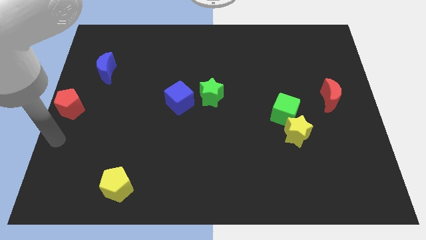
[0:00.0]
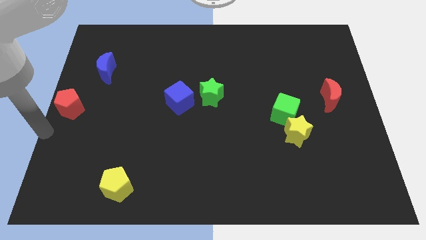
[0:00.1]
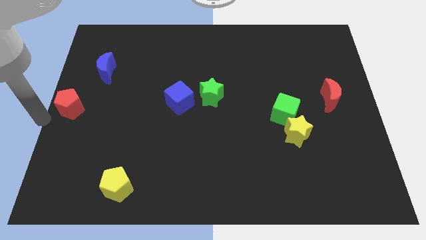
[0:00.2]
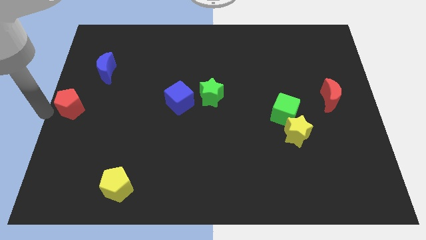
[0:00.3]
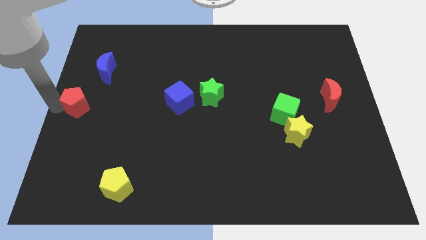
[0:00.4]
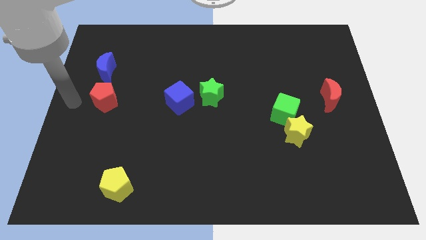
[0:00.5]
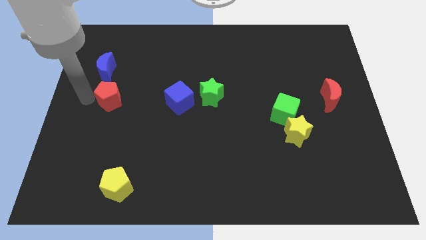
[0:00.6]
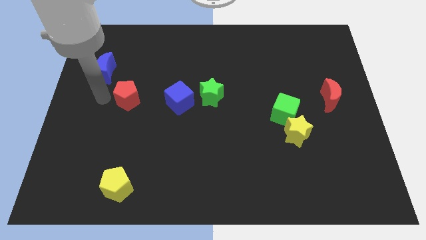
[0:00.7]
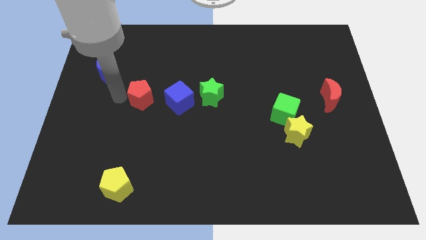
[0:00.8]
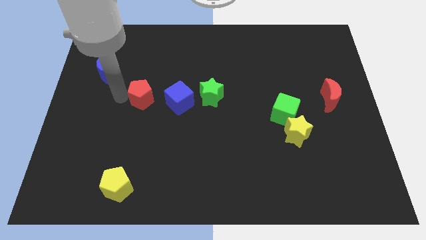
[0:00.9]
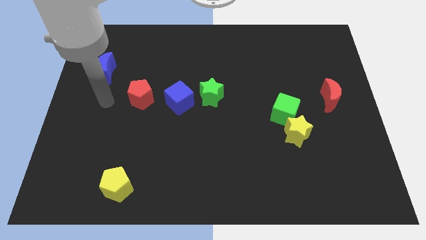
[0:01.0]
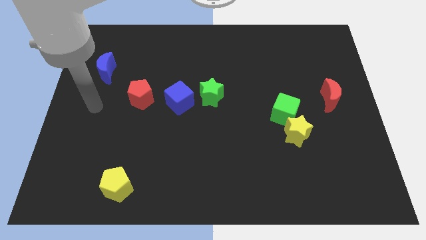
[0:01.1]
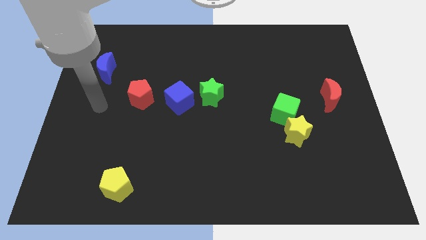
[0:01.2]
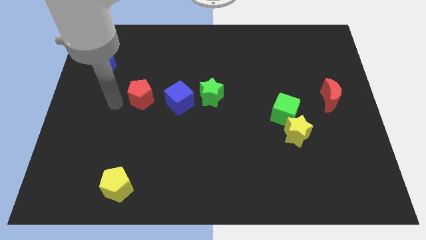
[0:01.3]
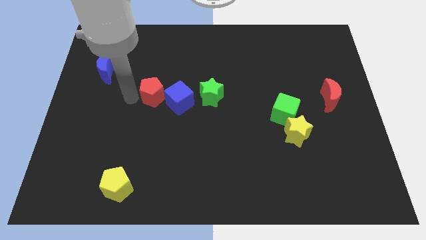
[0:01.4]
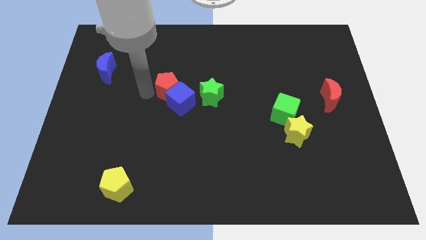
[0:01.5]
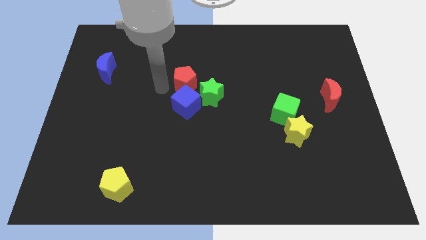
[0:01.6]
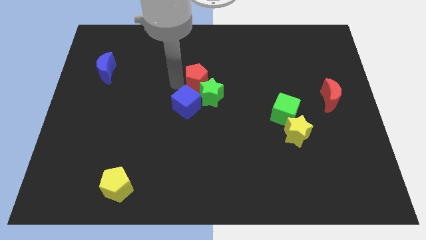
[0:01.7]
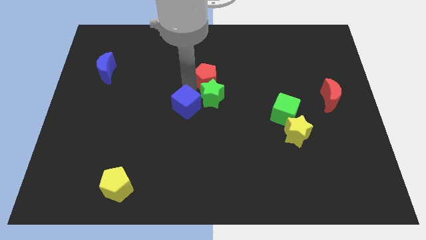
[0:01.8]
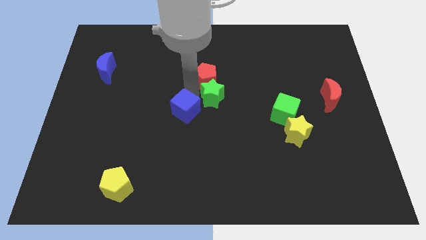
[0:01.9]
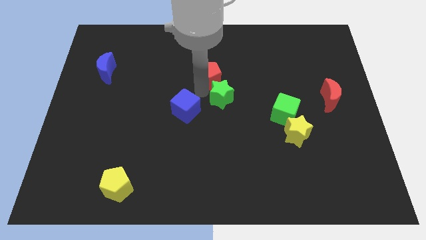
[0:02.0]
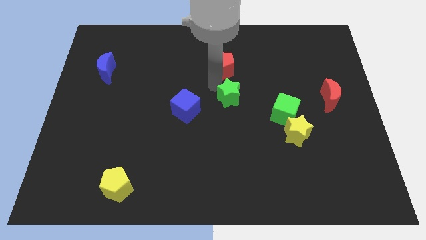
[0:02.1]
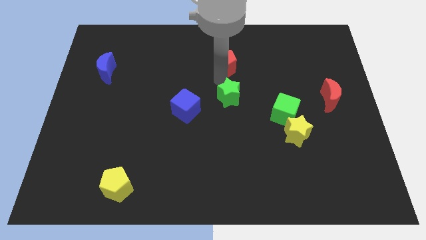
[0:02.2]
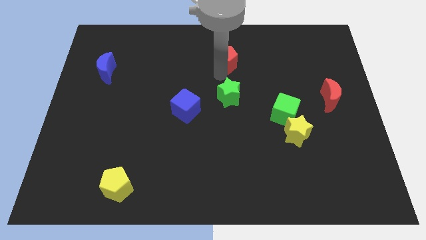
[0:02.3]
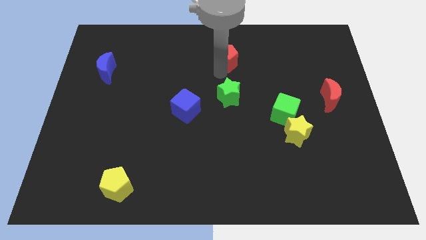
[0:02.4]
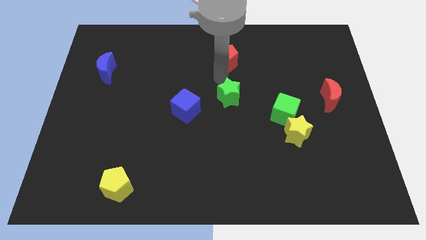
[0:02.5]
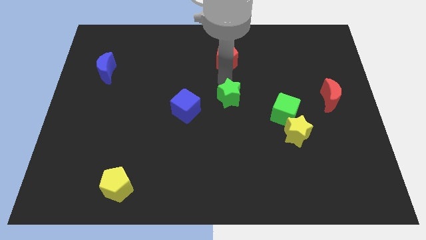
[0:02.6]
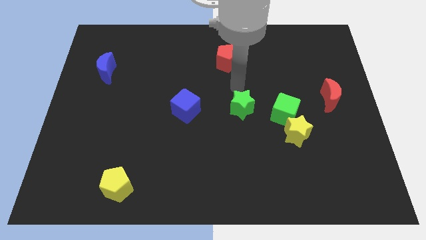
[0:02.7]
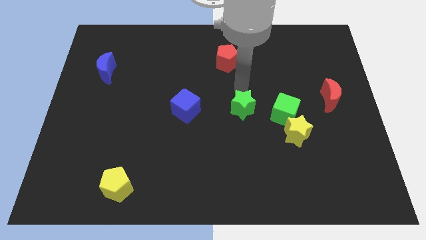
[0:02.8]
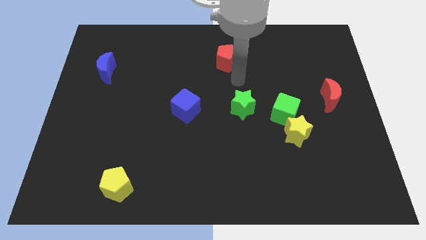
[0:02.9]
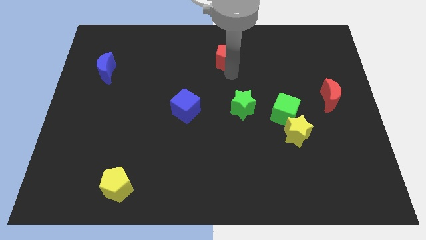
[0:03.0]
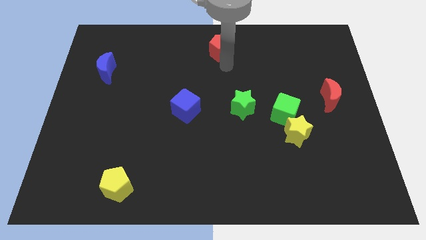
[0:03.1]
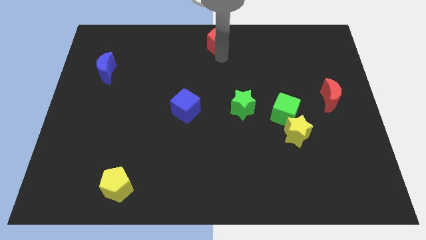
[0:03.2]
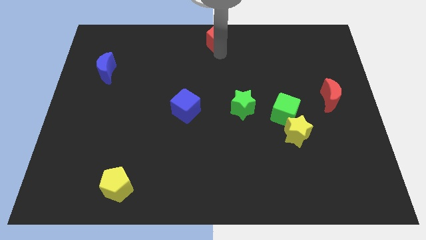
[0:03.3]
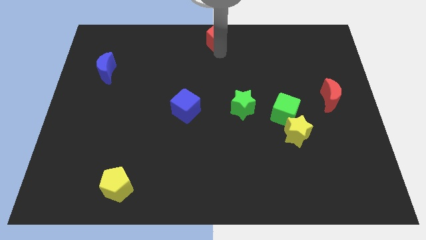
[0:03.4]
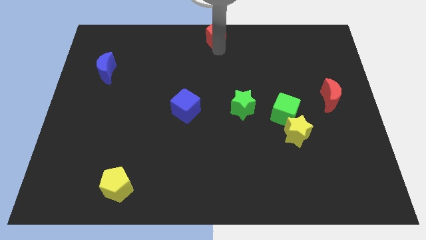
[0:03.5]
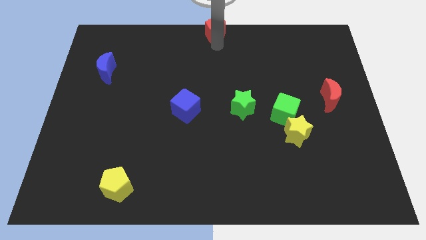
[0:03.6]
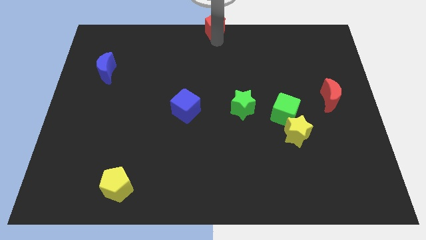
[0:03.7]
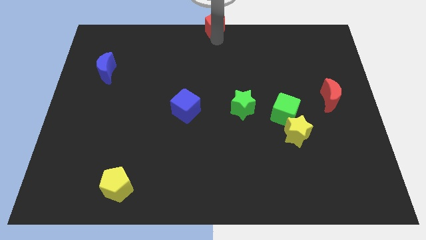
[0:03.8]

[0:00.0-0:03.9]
put the red pentagon diagonally to red moon

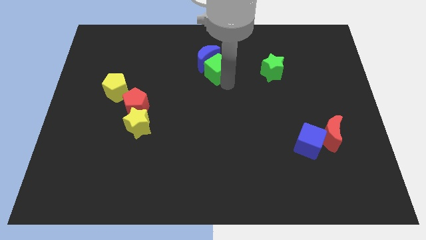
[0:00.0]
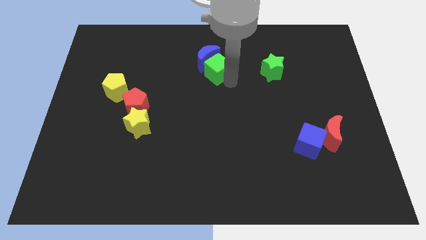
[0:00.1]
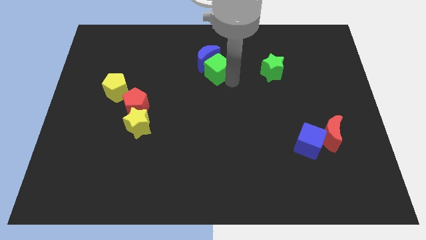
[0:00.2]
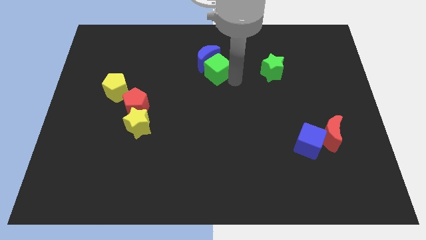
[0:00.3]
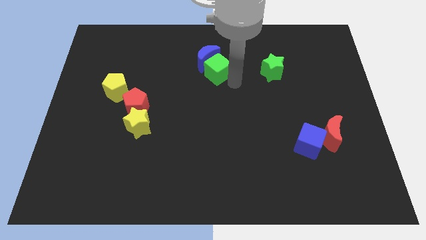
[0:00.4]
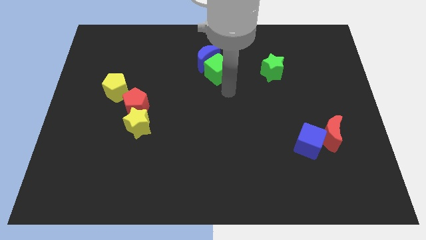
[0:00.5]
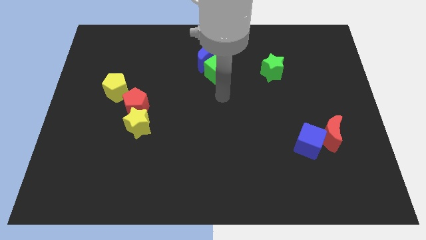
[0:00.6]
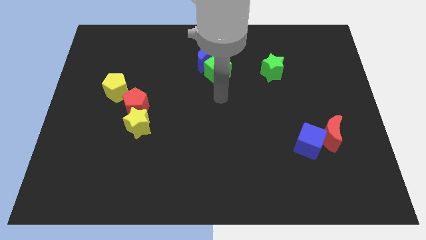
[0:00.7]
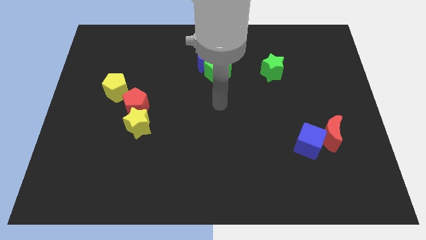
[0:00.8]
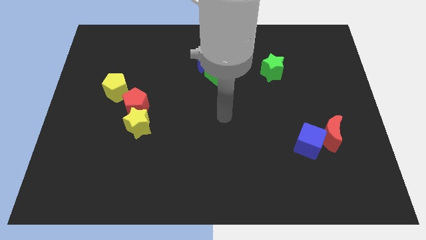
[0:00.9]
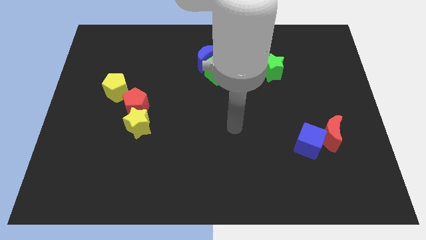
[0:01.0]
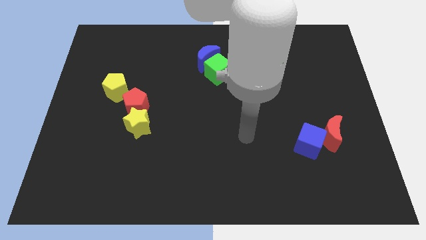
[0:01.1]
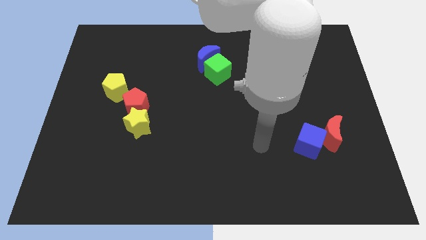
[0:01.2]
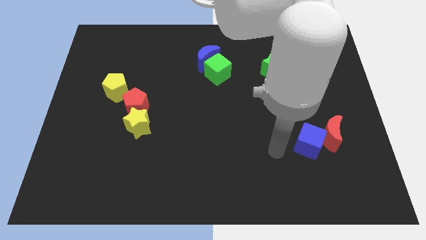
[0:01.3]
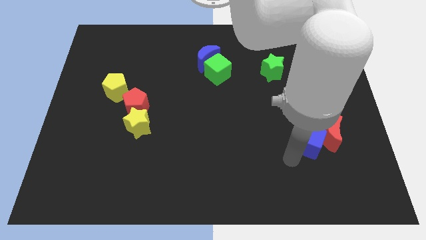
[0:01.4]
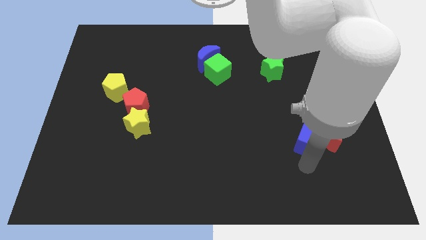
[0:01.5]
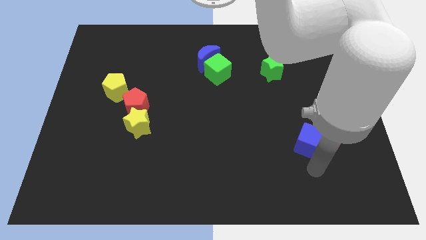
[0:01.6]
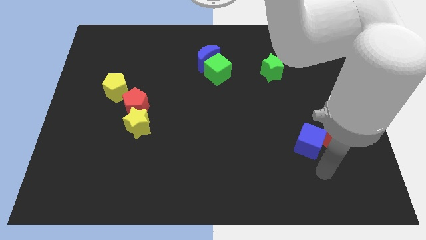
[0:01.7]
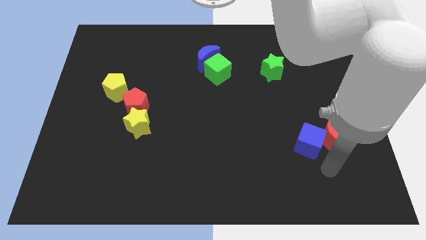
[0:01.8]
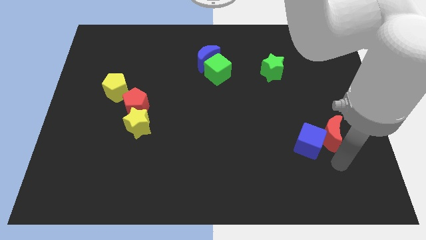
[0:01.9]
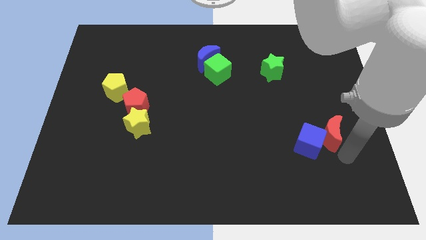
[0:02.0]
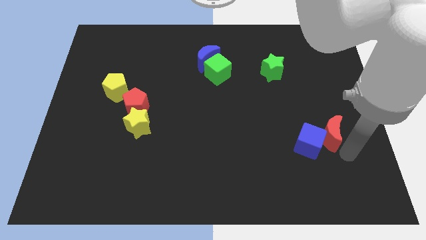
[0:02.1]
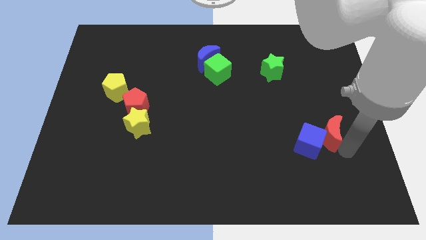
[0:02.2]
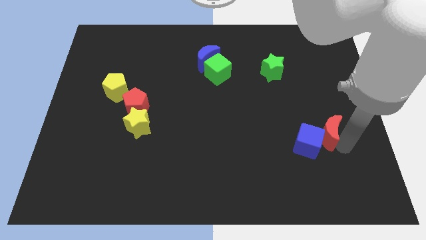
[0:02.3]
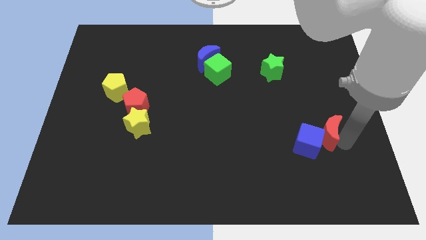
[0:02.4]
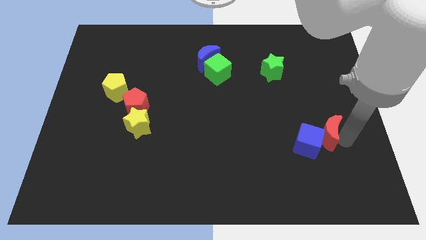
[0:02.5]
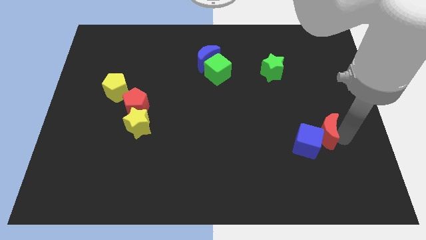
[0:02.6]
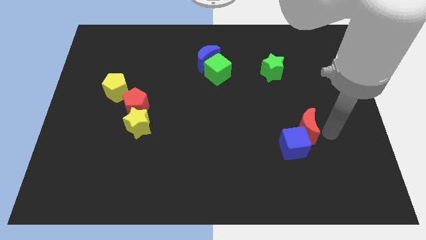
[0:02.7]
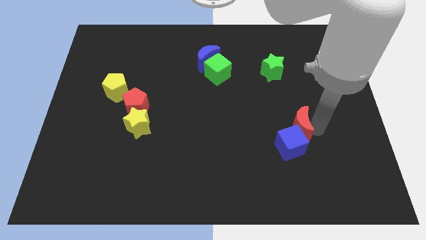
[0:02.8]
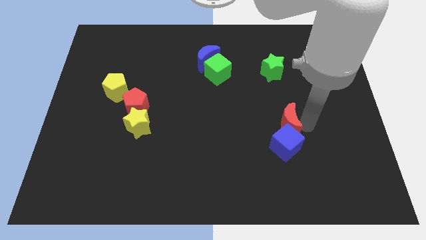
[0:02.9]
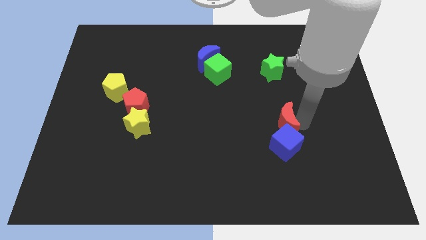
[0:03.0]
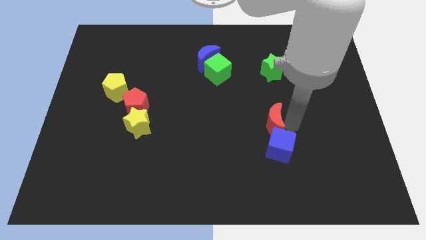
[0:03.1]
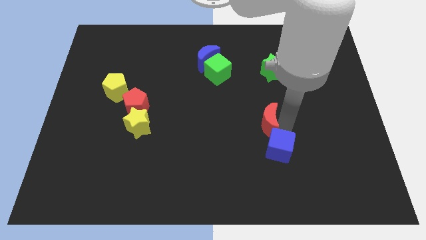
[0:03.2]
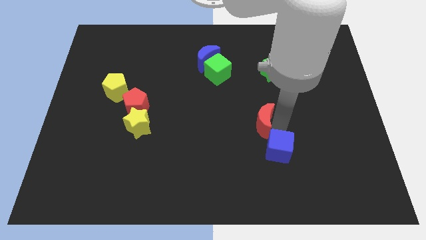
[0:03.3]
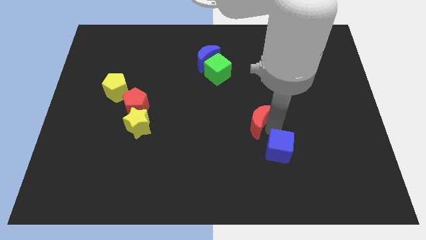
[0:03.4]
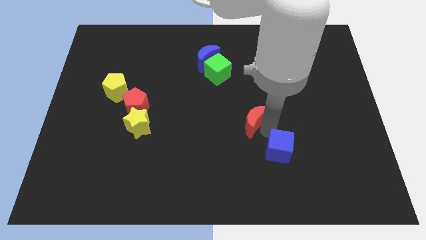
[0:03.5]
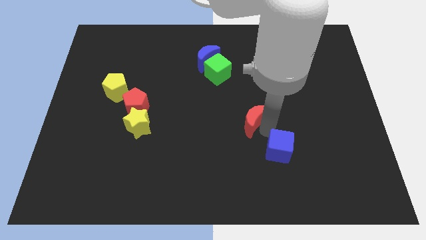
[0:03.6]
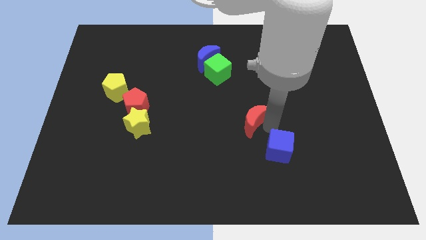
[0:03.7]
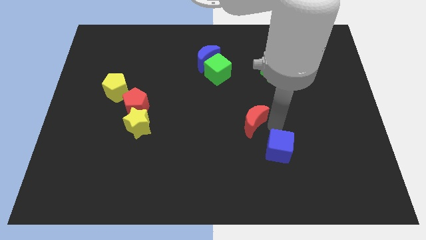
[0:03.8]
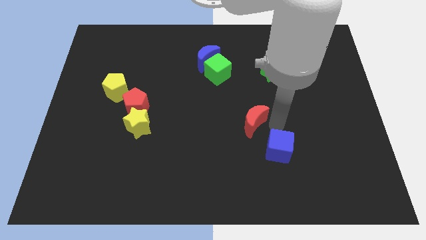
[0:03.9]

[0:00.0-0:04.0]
separate red moon and the blue cube

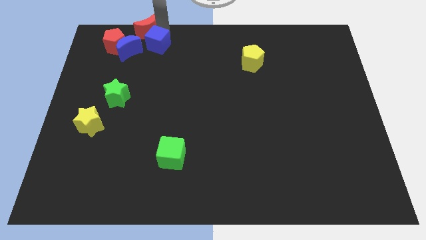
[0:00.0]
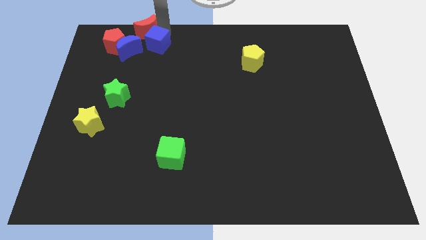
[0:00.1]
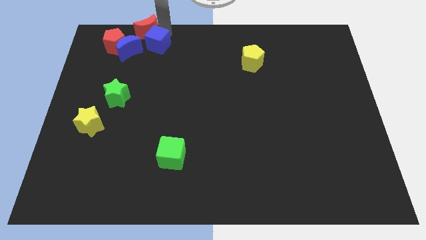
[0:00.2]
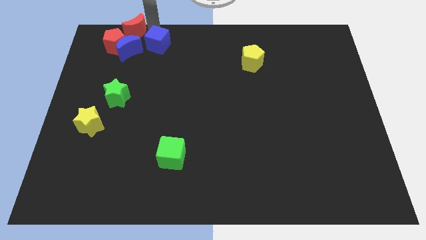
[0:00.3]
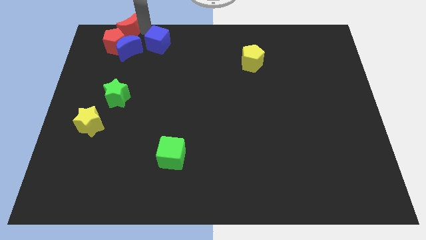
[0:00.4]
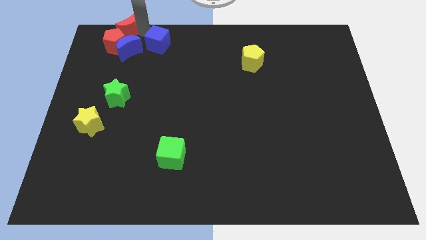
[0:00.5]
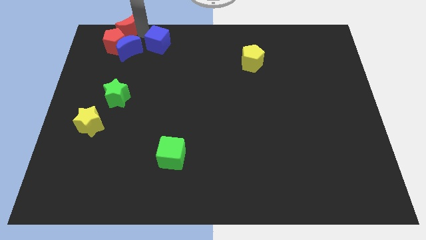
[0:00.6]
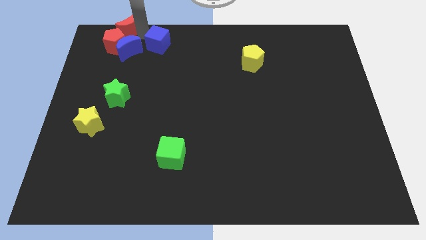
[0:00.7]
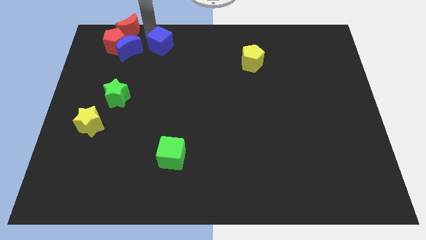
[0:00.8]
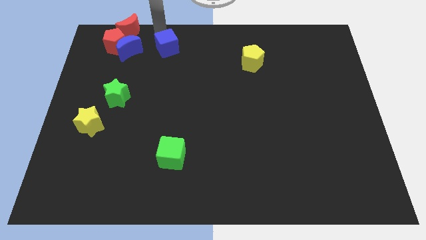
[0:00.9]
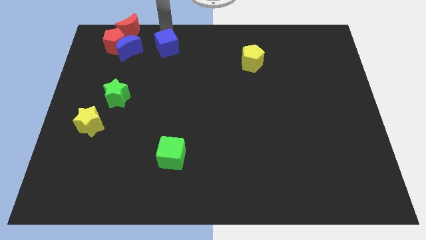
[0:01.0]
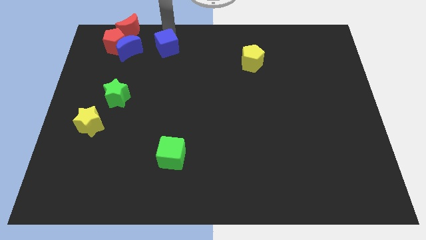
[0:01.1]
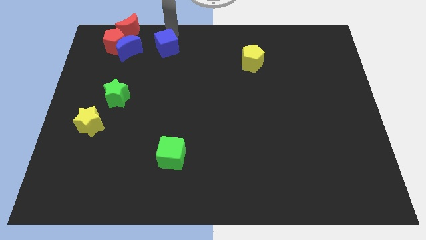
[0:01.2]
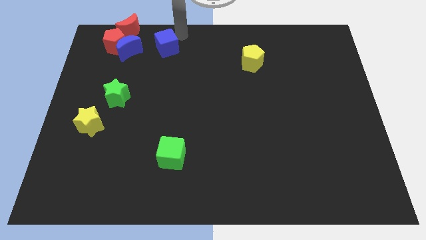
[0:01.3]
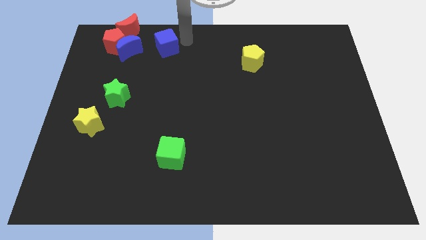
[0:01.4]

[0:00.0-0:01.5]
separate blue cube from the red moon
